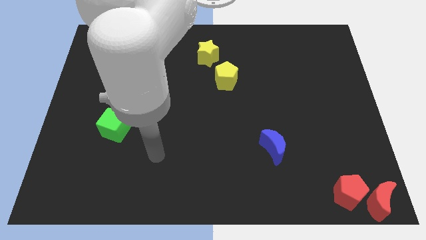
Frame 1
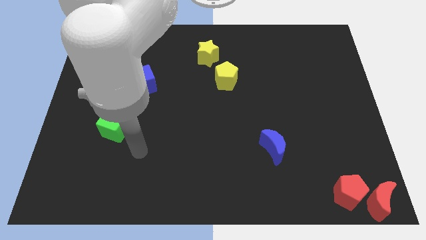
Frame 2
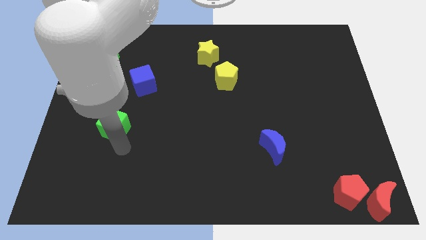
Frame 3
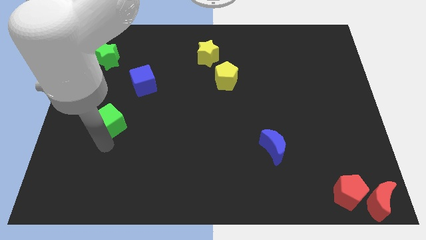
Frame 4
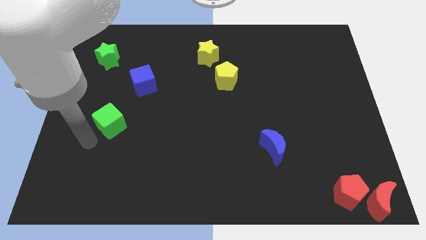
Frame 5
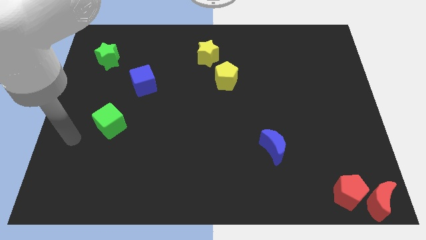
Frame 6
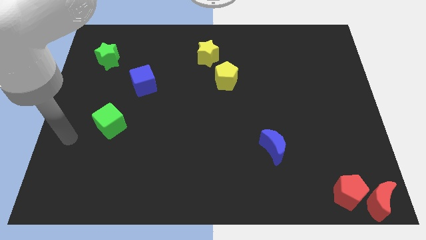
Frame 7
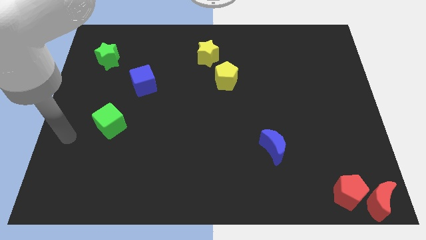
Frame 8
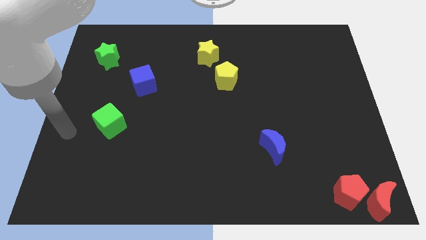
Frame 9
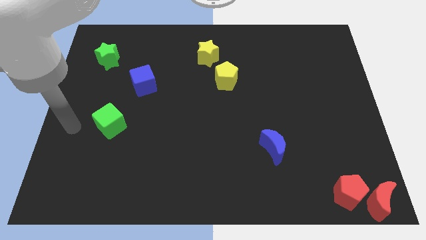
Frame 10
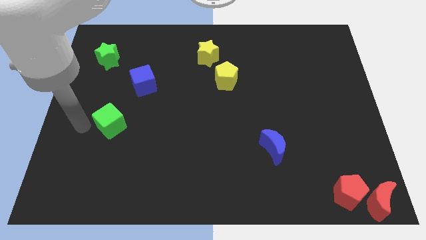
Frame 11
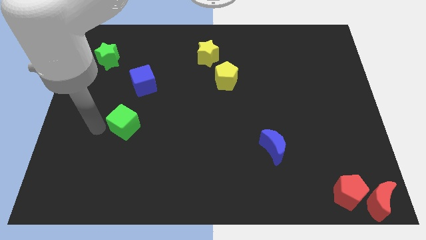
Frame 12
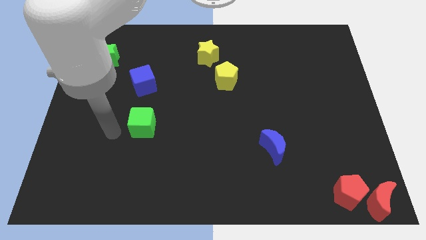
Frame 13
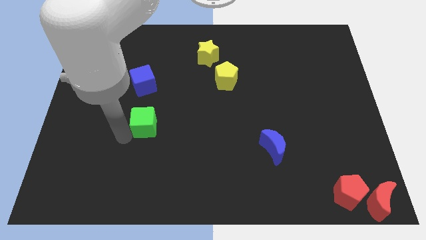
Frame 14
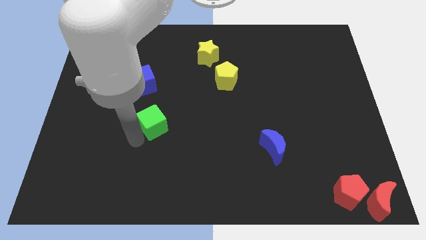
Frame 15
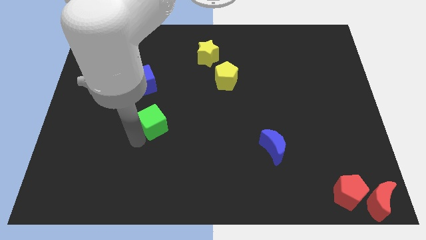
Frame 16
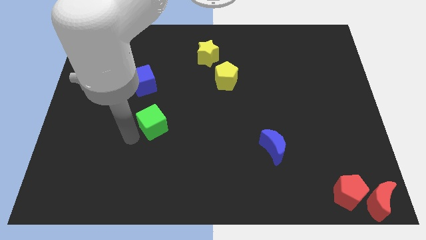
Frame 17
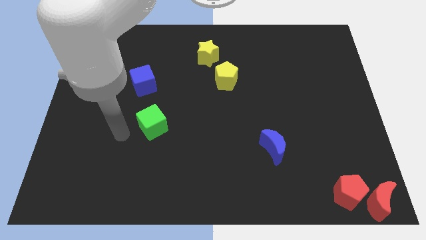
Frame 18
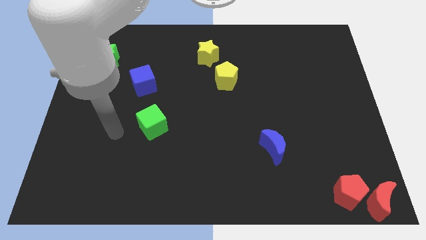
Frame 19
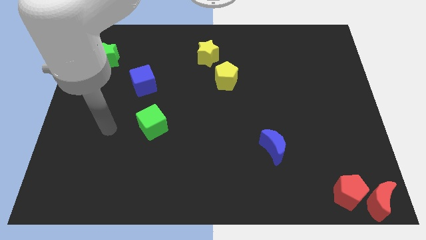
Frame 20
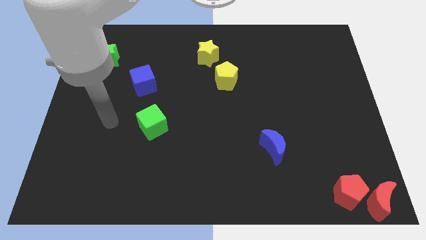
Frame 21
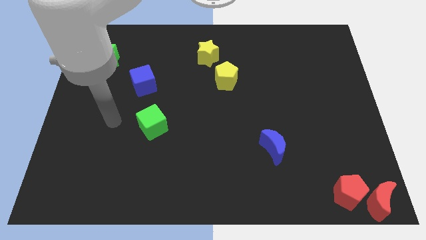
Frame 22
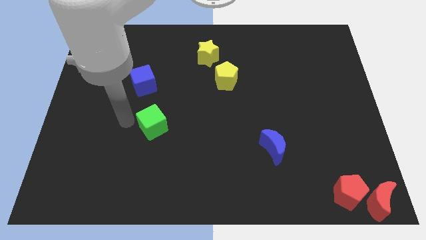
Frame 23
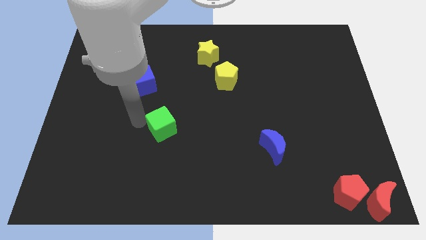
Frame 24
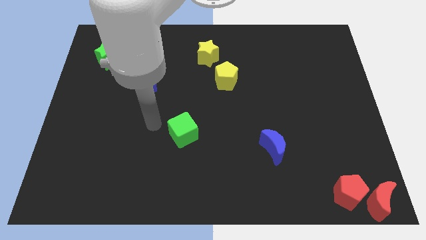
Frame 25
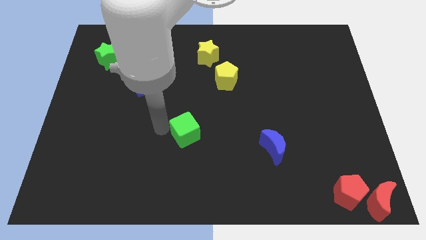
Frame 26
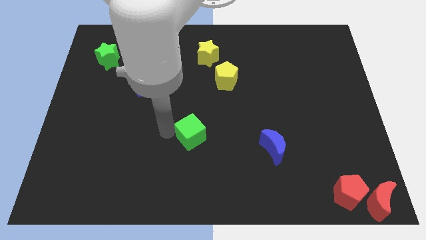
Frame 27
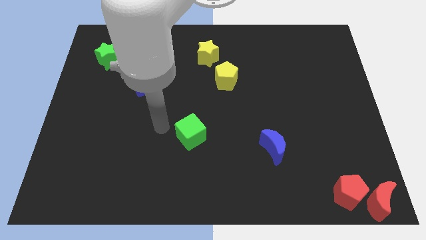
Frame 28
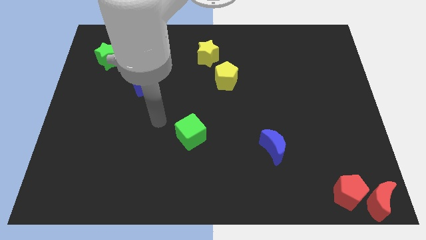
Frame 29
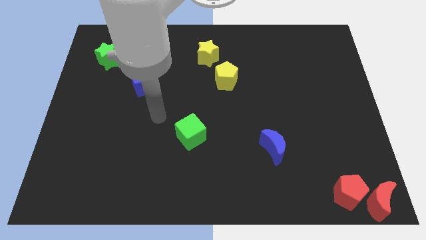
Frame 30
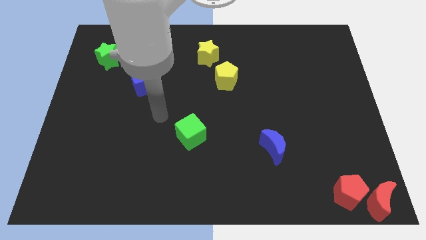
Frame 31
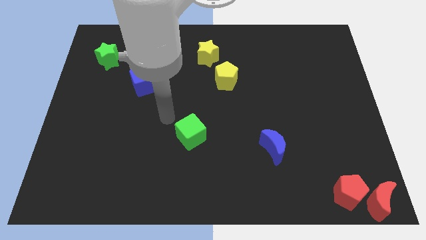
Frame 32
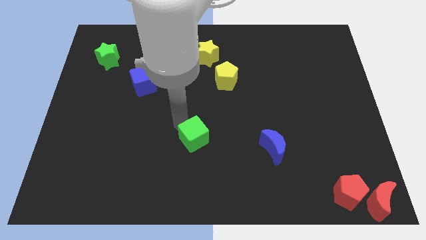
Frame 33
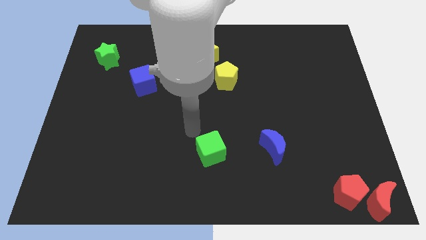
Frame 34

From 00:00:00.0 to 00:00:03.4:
push green cube towards left of the blue moon

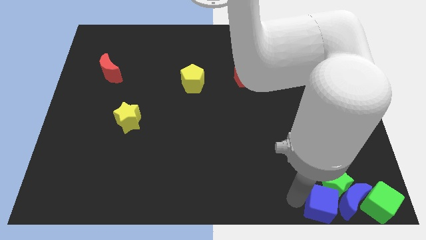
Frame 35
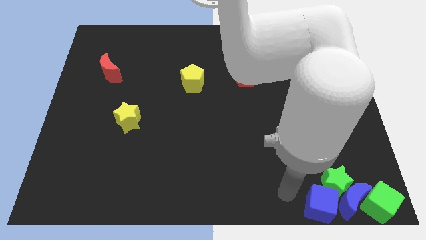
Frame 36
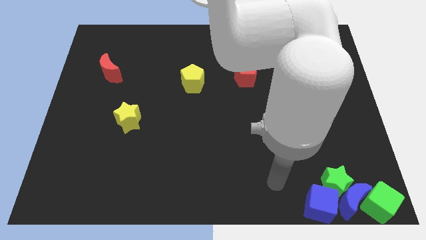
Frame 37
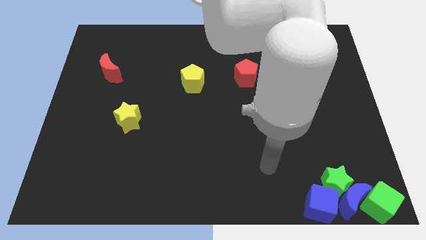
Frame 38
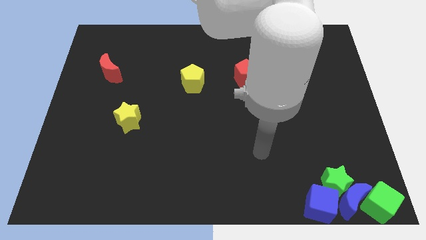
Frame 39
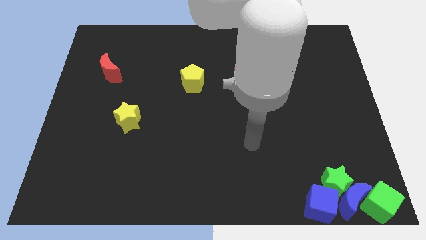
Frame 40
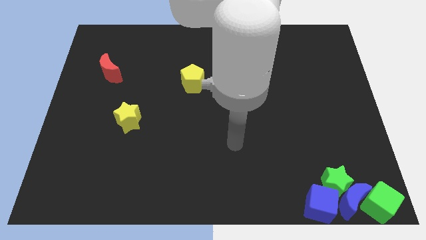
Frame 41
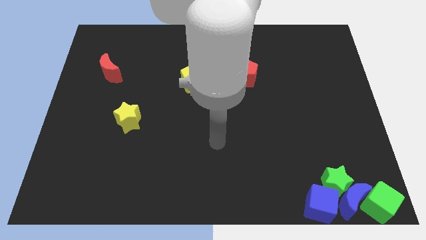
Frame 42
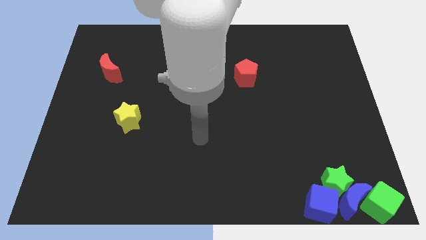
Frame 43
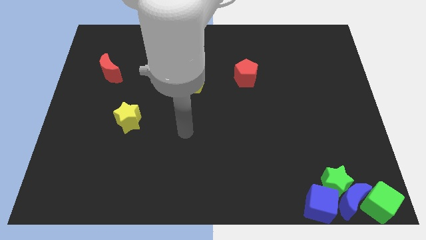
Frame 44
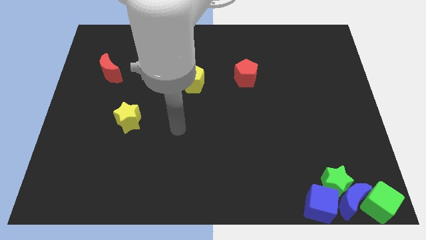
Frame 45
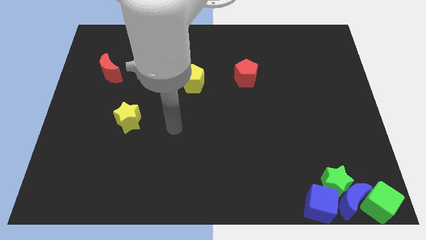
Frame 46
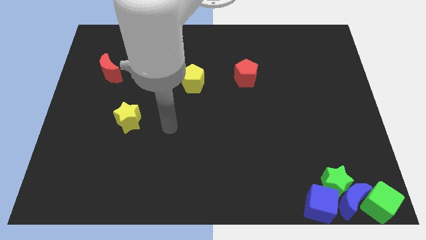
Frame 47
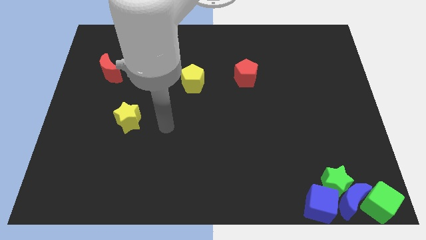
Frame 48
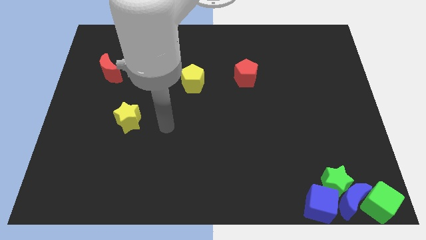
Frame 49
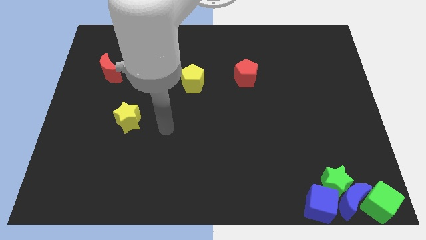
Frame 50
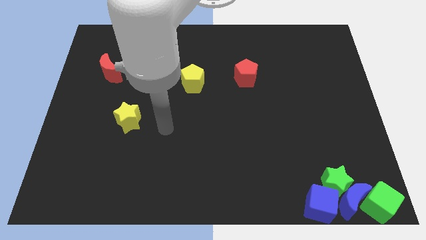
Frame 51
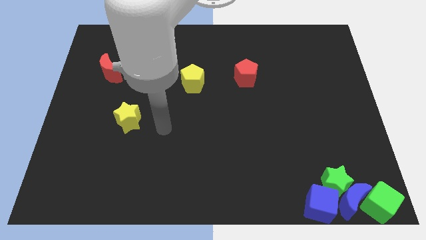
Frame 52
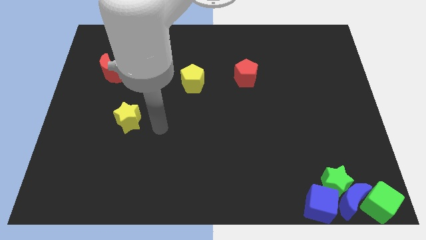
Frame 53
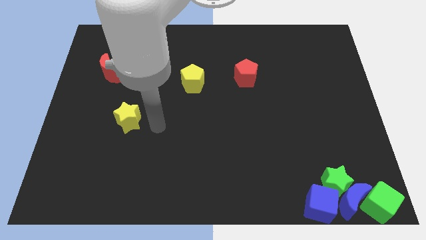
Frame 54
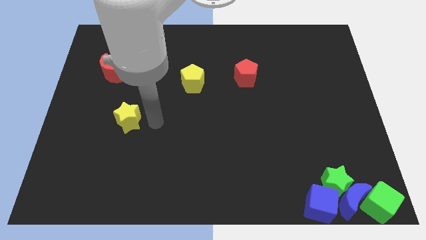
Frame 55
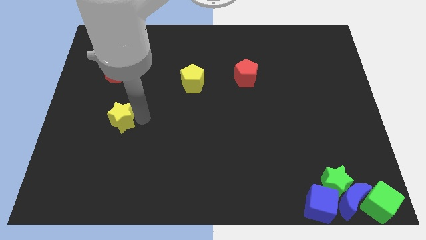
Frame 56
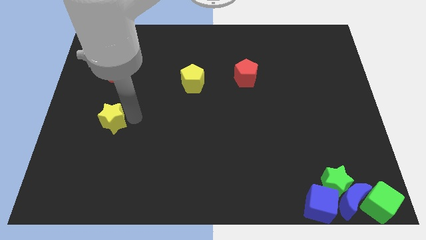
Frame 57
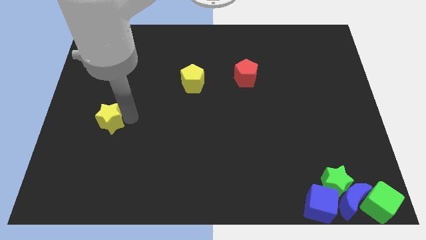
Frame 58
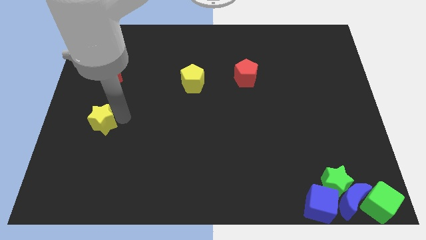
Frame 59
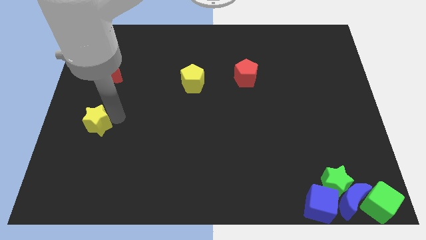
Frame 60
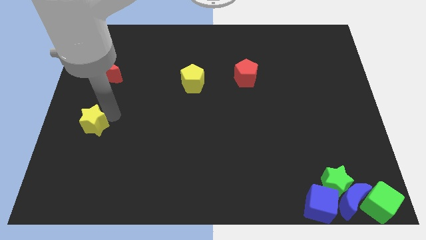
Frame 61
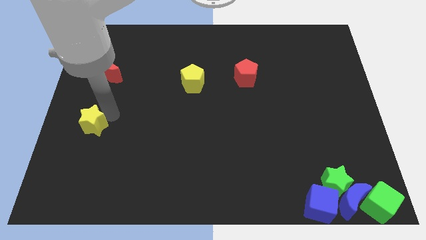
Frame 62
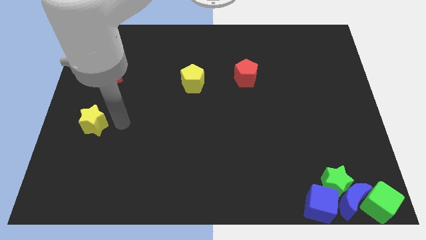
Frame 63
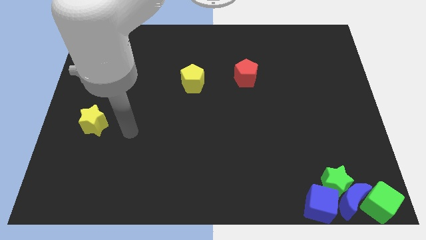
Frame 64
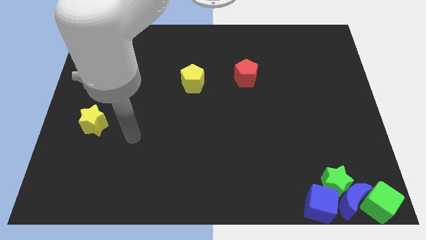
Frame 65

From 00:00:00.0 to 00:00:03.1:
push the yellow star towards the left side of the board

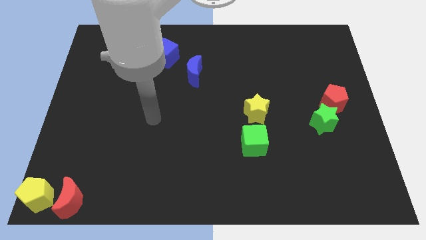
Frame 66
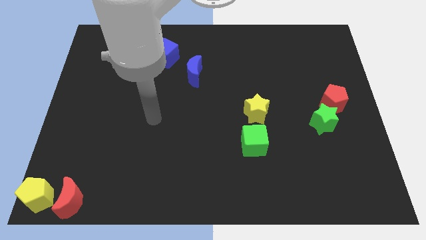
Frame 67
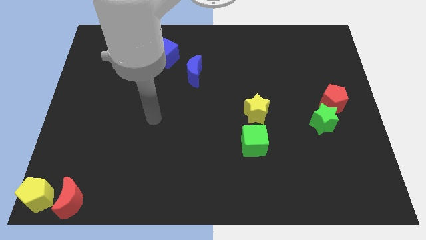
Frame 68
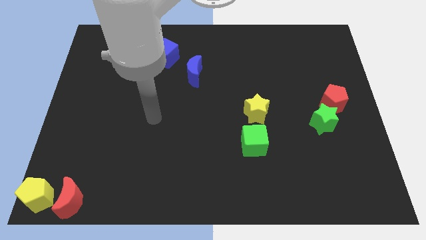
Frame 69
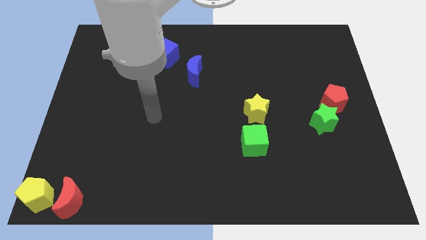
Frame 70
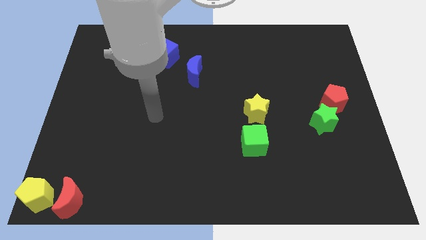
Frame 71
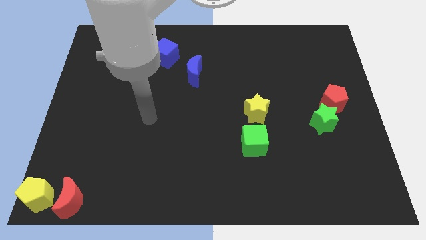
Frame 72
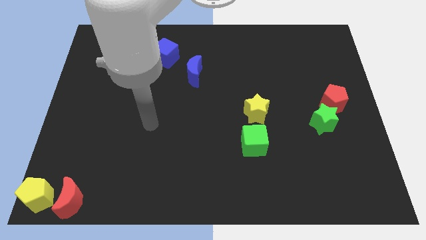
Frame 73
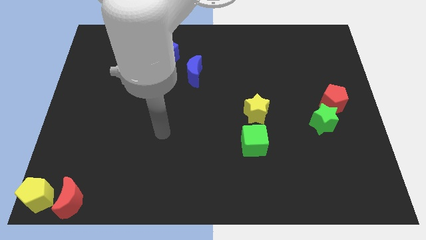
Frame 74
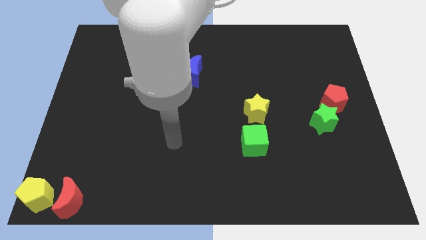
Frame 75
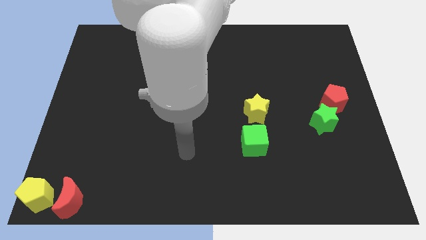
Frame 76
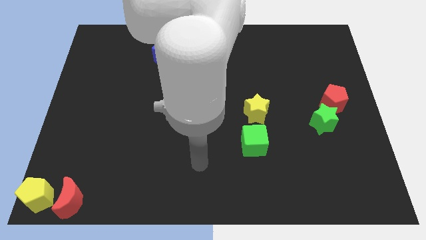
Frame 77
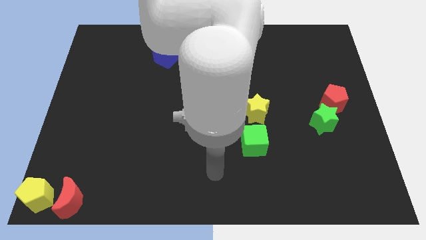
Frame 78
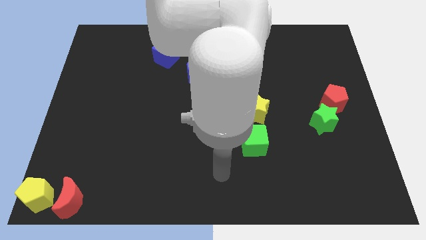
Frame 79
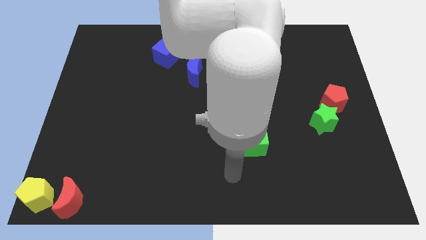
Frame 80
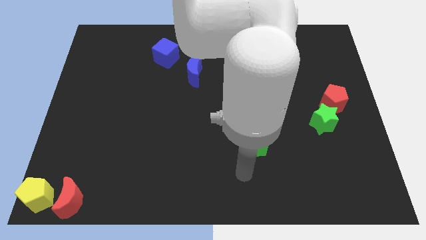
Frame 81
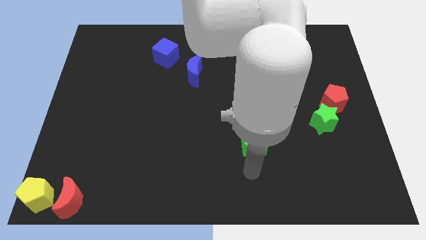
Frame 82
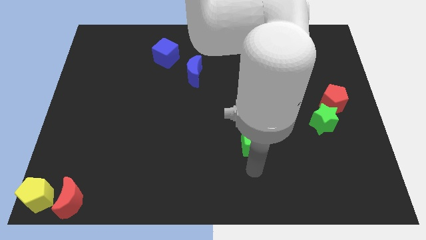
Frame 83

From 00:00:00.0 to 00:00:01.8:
point your hand below the green cube

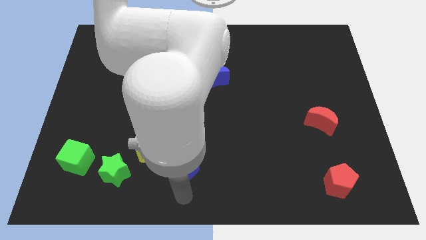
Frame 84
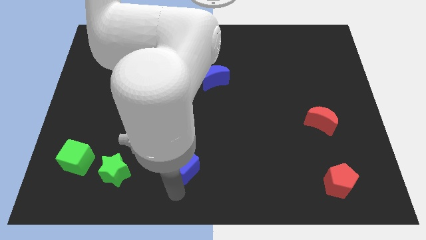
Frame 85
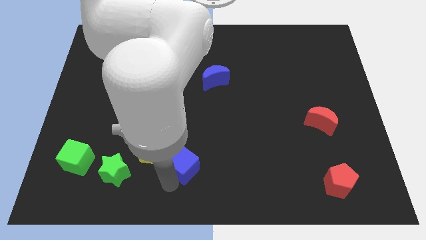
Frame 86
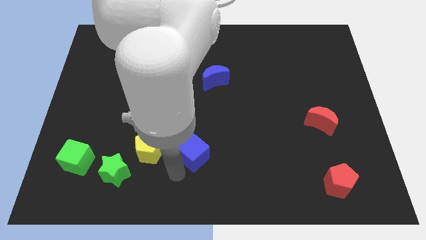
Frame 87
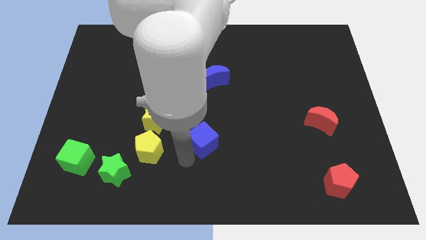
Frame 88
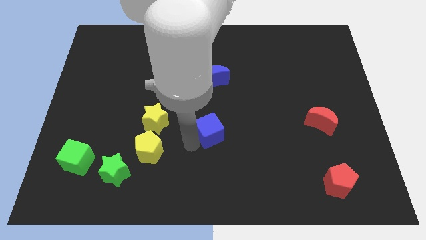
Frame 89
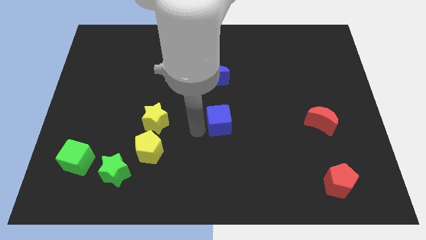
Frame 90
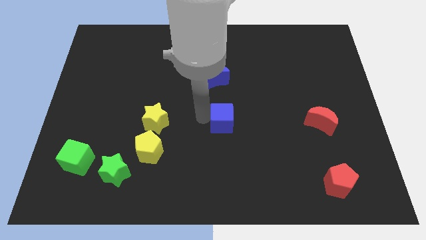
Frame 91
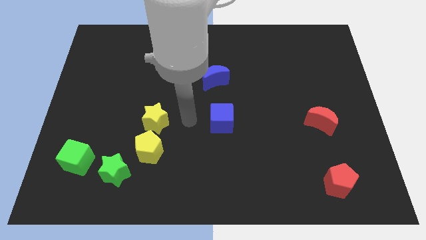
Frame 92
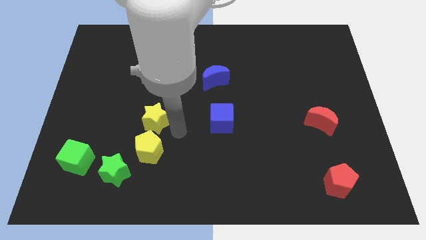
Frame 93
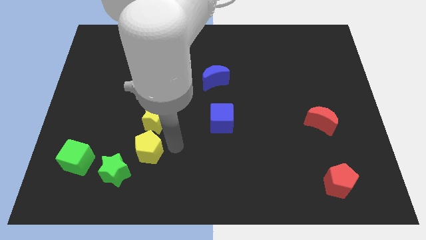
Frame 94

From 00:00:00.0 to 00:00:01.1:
move blue cube to the center
